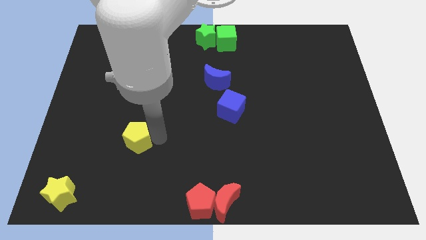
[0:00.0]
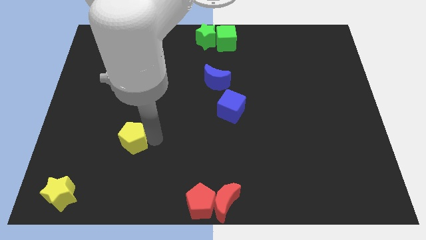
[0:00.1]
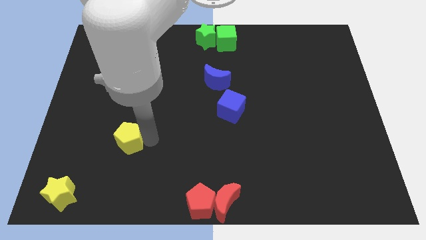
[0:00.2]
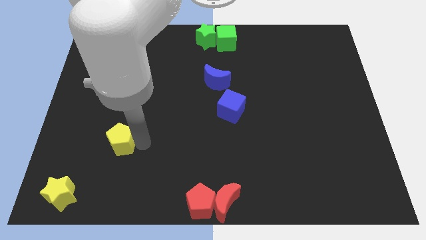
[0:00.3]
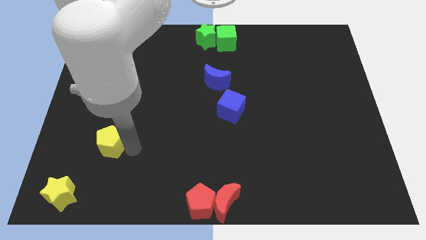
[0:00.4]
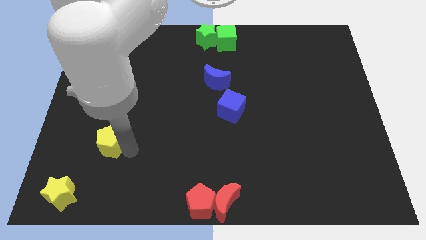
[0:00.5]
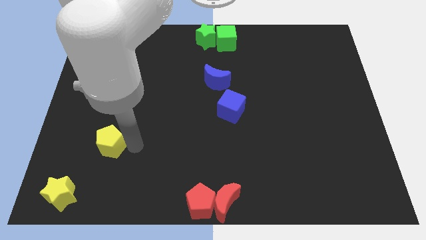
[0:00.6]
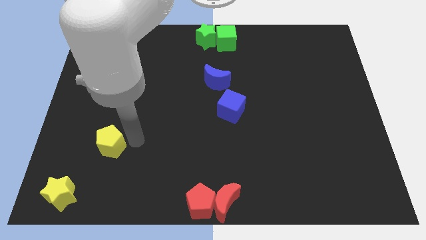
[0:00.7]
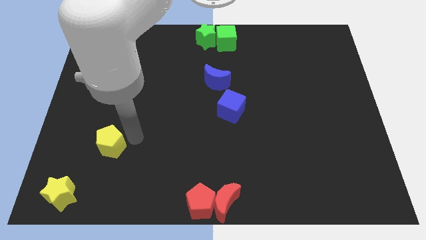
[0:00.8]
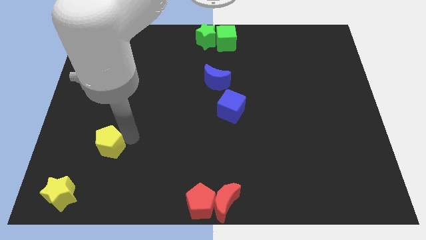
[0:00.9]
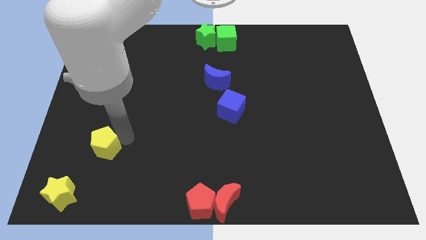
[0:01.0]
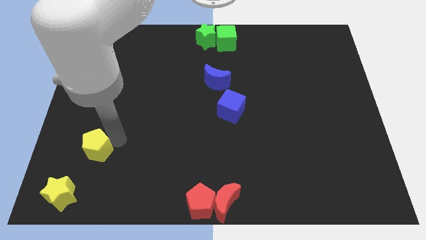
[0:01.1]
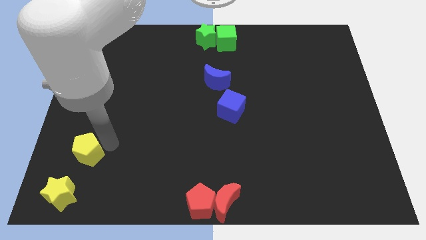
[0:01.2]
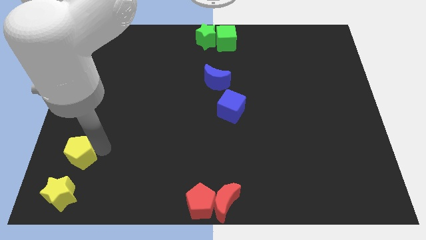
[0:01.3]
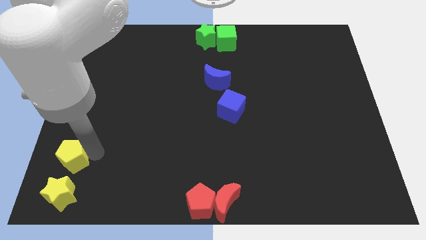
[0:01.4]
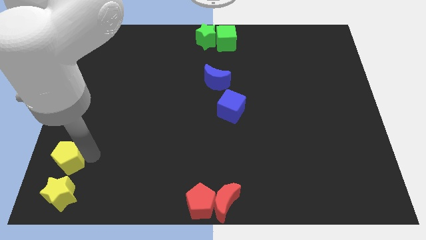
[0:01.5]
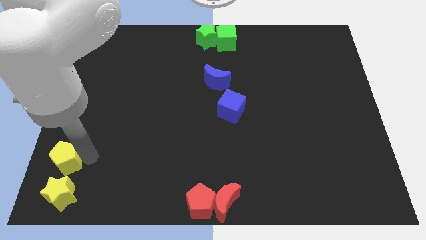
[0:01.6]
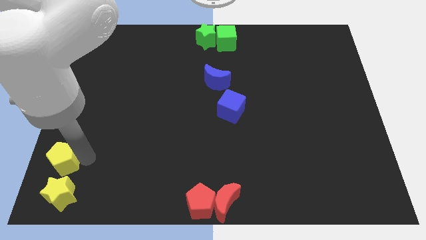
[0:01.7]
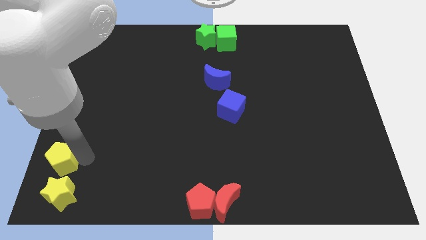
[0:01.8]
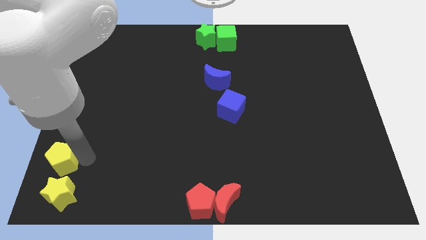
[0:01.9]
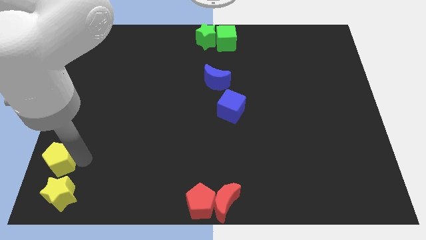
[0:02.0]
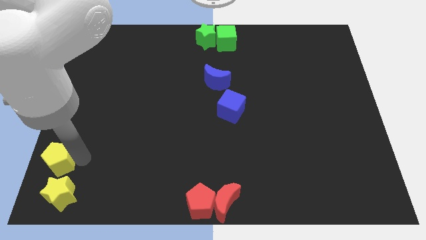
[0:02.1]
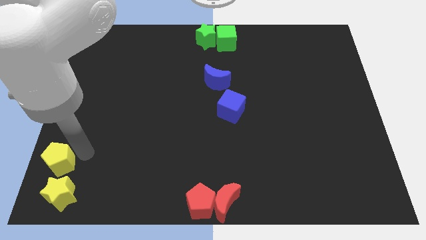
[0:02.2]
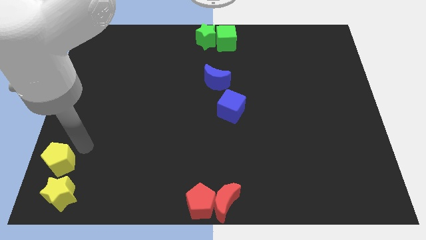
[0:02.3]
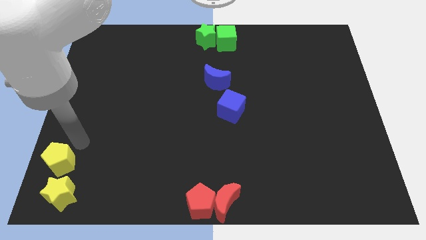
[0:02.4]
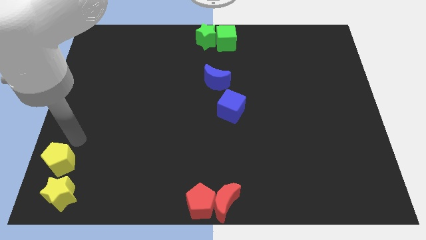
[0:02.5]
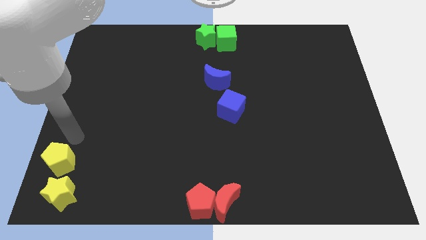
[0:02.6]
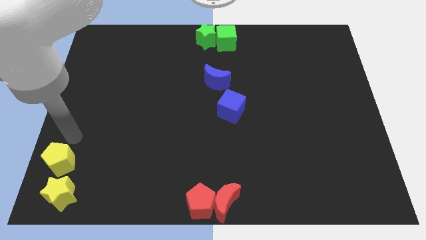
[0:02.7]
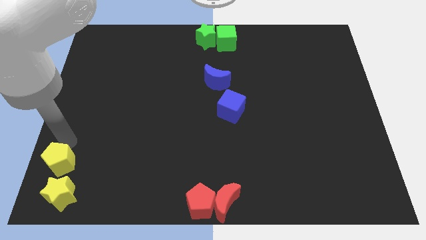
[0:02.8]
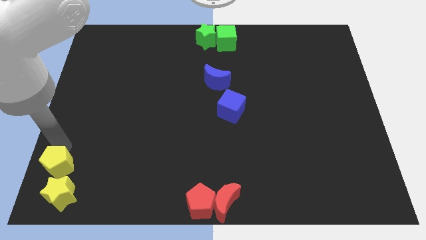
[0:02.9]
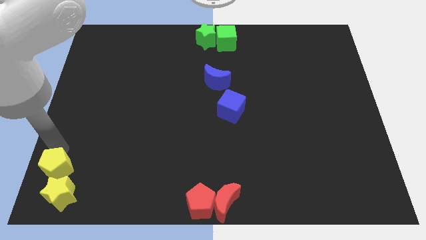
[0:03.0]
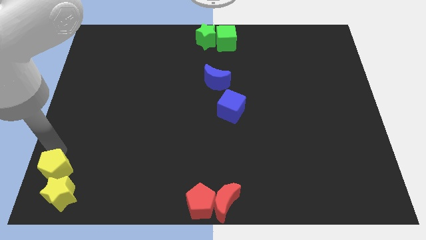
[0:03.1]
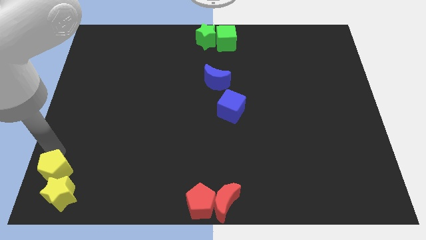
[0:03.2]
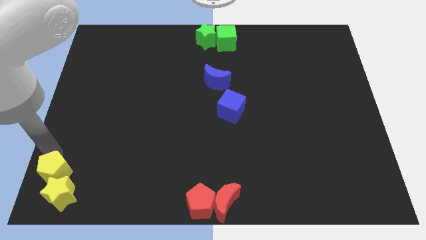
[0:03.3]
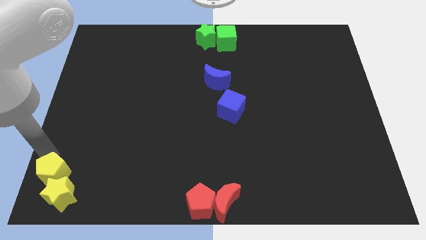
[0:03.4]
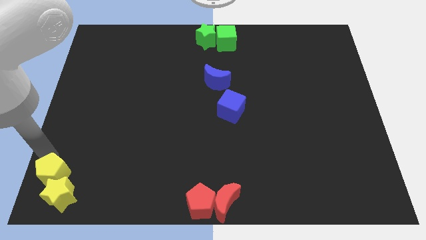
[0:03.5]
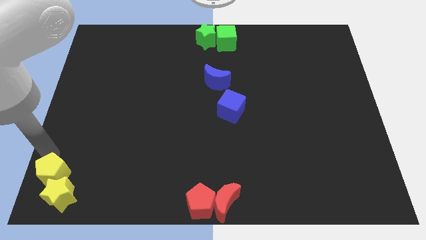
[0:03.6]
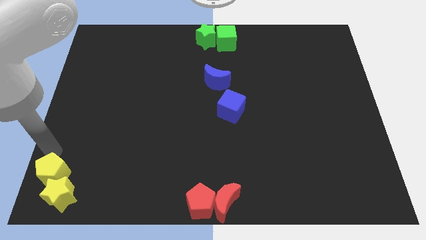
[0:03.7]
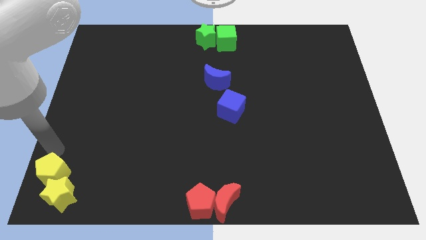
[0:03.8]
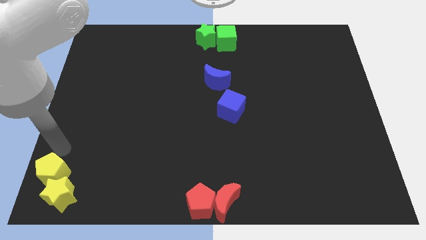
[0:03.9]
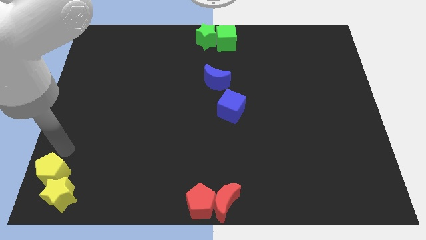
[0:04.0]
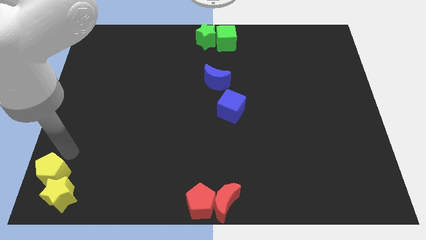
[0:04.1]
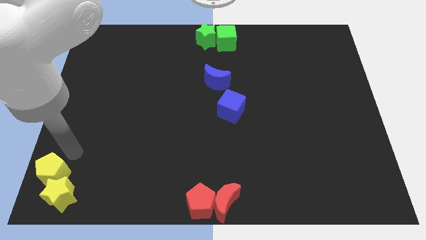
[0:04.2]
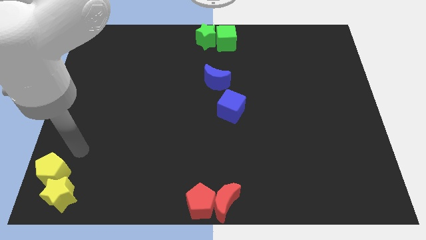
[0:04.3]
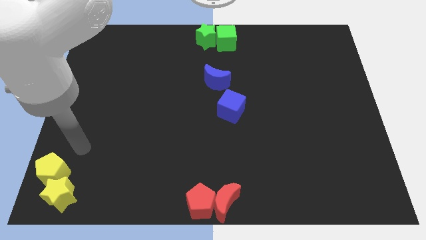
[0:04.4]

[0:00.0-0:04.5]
push the yellow pentagon into the yellow star

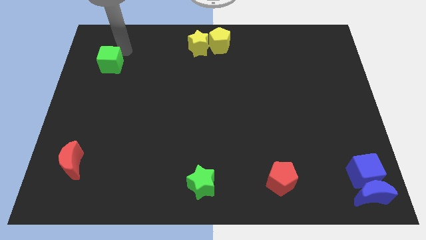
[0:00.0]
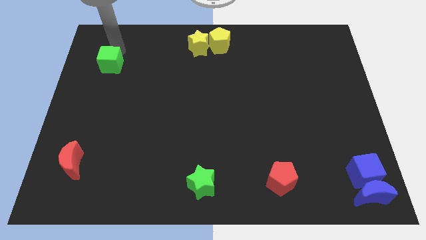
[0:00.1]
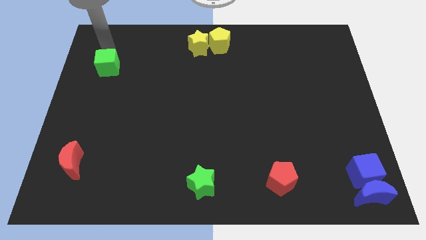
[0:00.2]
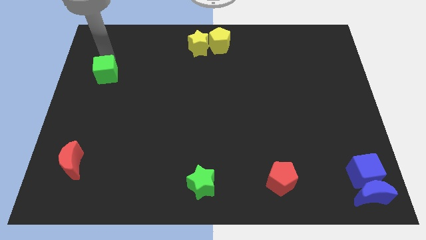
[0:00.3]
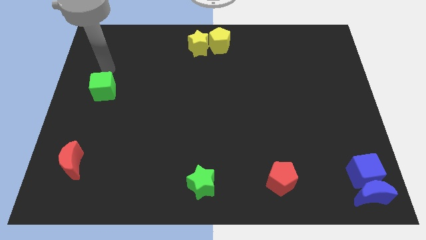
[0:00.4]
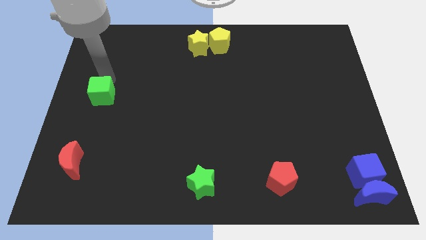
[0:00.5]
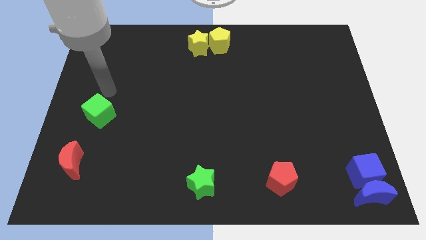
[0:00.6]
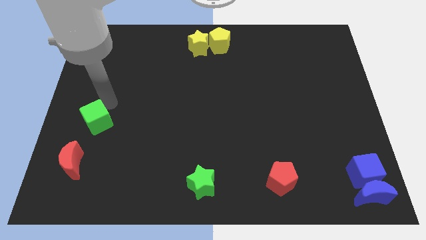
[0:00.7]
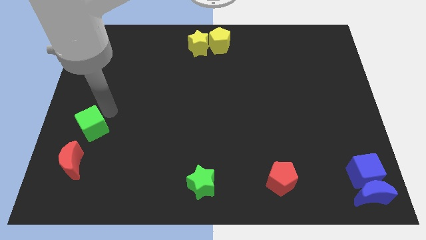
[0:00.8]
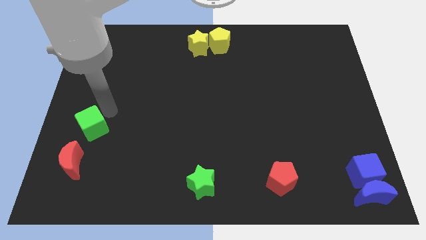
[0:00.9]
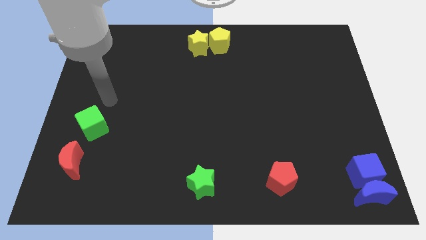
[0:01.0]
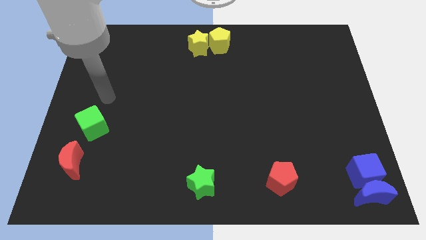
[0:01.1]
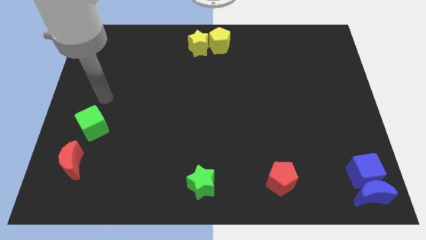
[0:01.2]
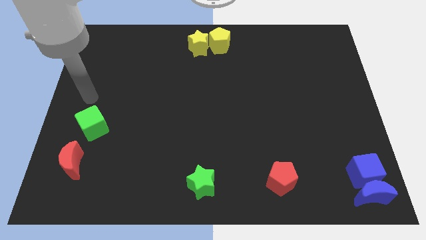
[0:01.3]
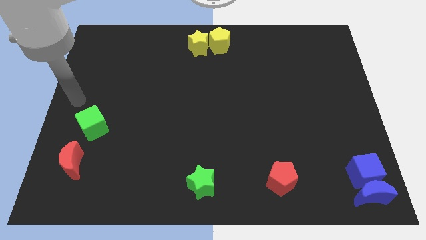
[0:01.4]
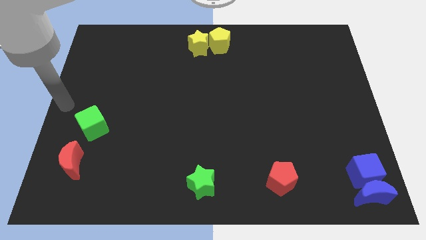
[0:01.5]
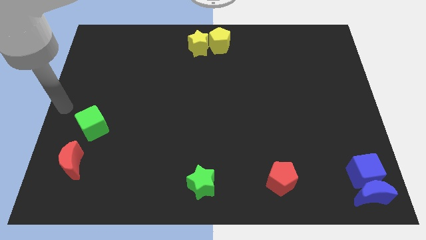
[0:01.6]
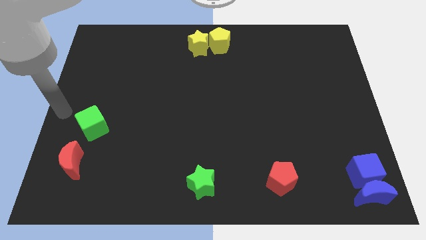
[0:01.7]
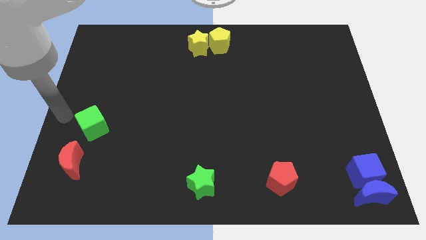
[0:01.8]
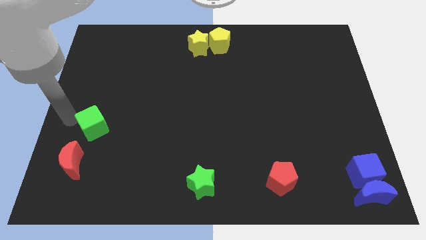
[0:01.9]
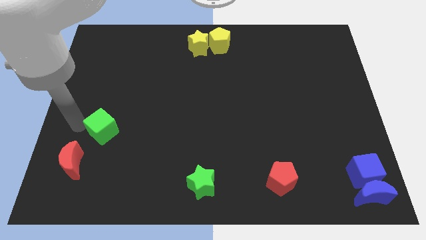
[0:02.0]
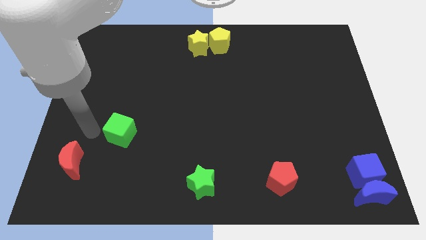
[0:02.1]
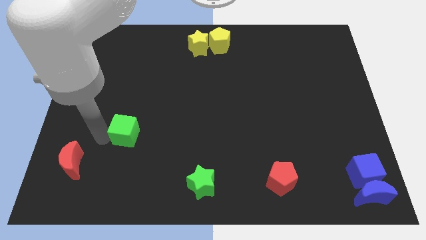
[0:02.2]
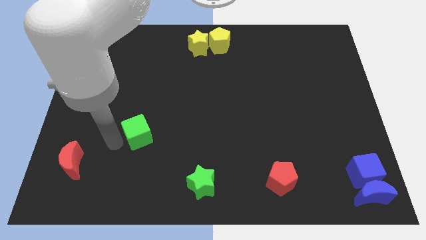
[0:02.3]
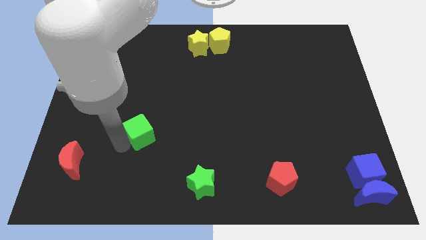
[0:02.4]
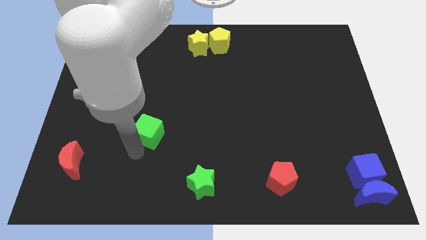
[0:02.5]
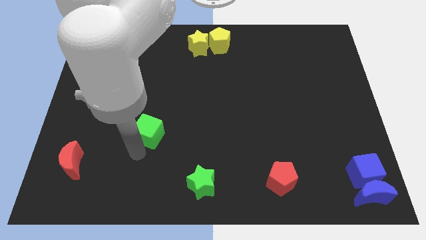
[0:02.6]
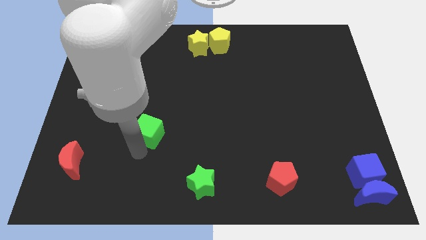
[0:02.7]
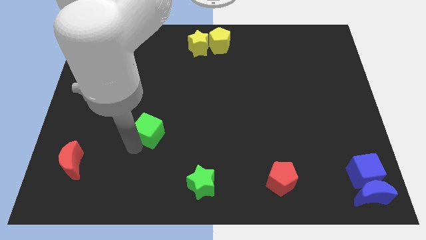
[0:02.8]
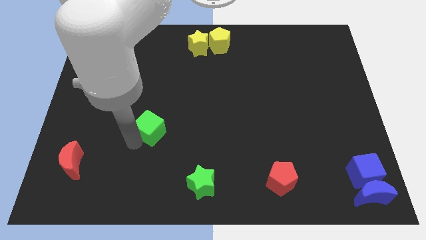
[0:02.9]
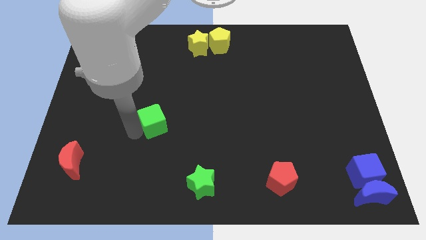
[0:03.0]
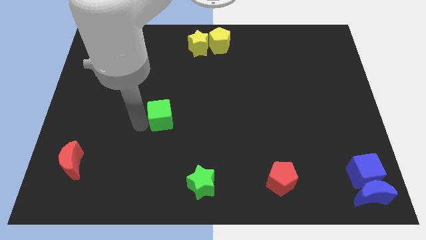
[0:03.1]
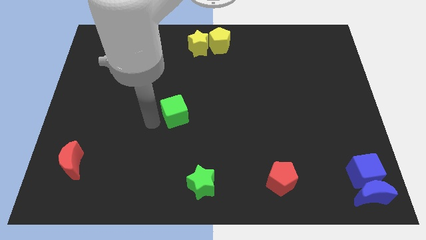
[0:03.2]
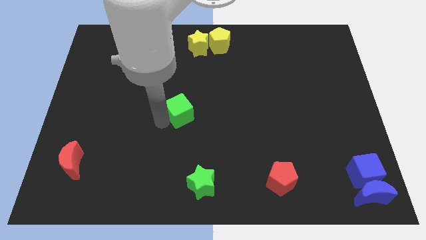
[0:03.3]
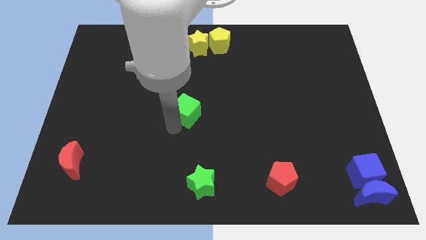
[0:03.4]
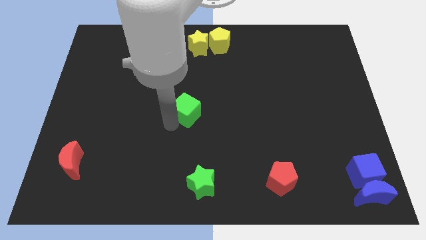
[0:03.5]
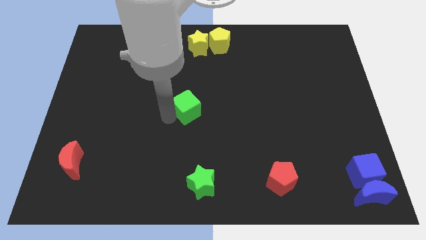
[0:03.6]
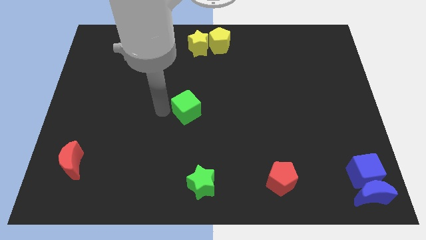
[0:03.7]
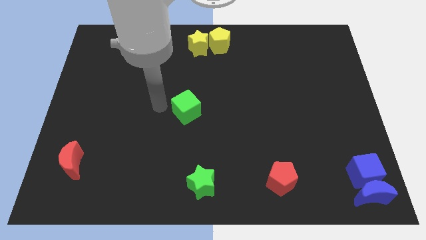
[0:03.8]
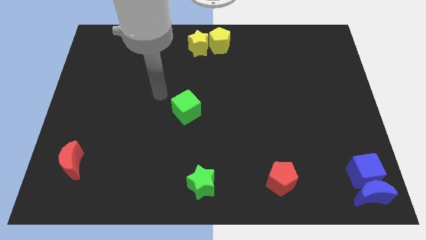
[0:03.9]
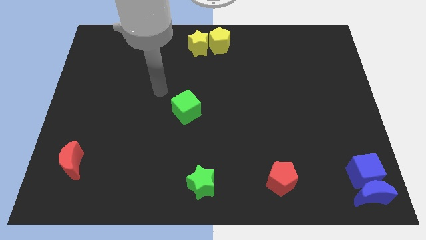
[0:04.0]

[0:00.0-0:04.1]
push the green cube to the center of the board

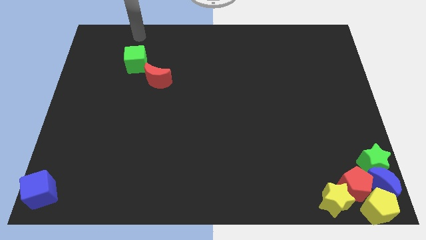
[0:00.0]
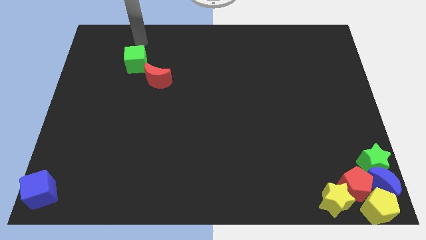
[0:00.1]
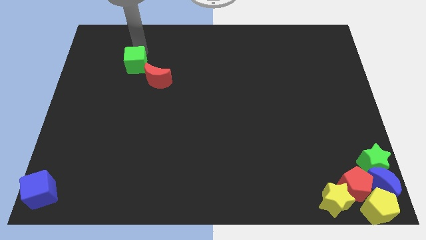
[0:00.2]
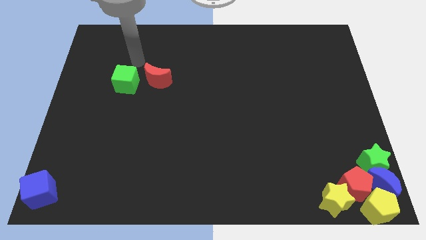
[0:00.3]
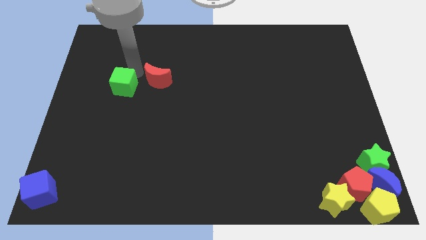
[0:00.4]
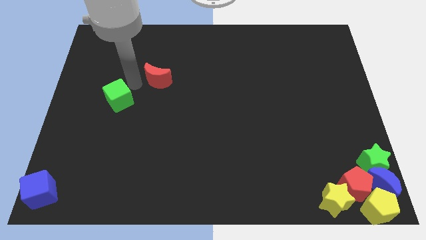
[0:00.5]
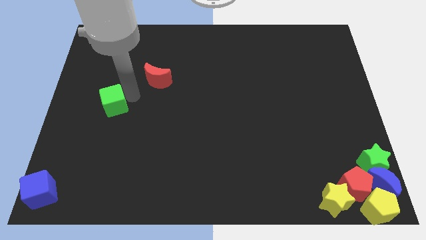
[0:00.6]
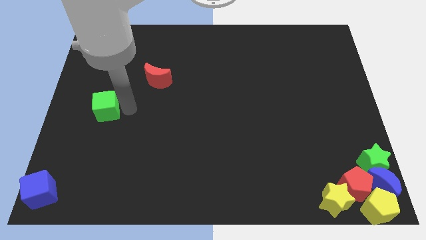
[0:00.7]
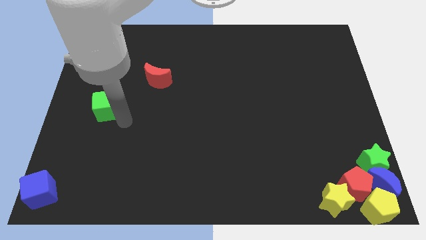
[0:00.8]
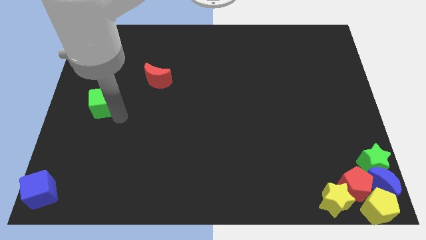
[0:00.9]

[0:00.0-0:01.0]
push the green cube towards the bottom side of the board
